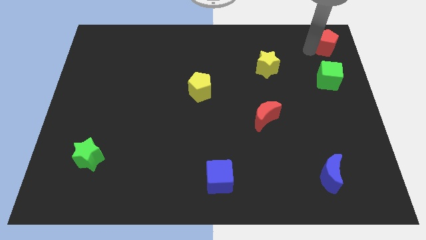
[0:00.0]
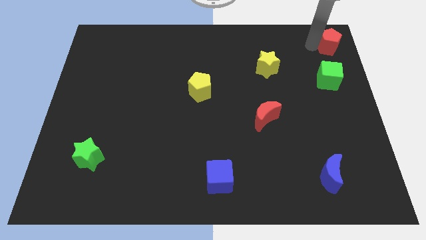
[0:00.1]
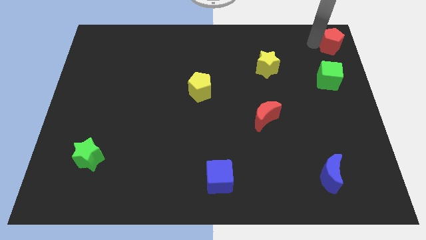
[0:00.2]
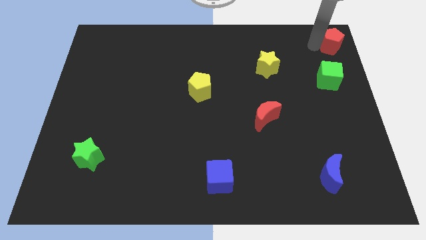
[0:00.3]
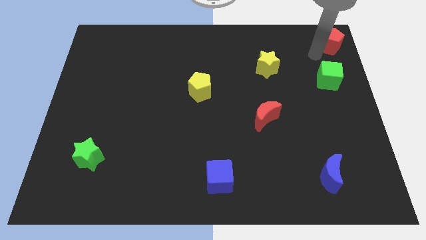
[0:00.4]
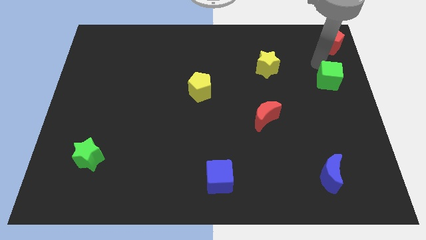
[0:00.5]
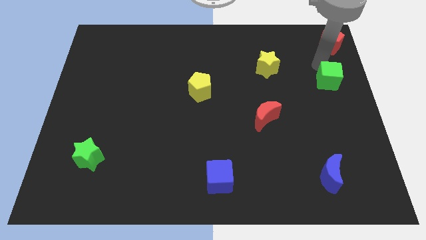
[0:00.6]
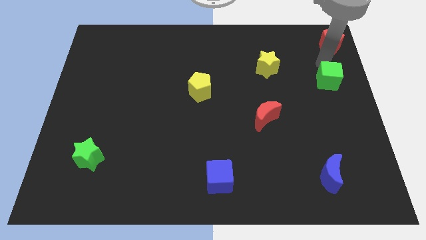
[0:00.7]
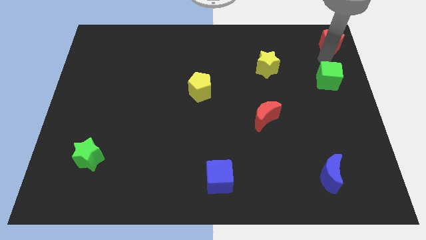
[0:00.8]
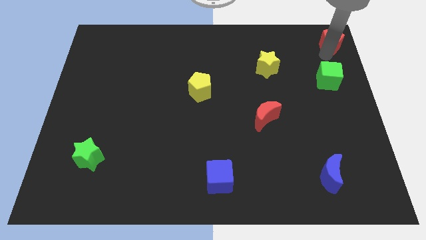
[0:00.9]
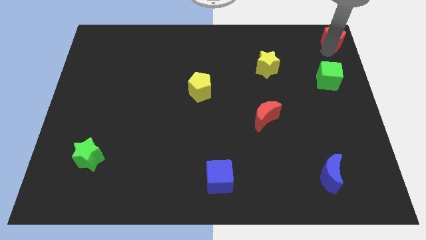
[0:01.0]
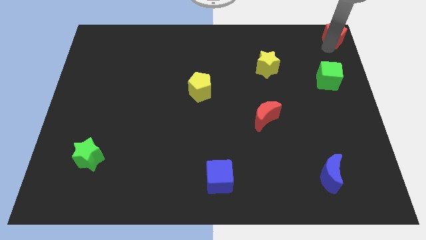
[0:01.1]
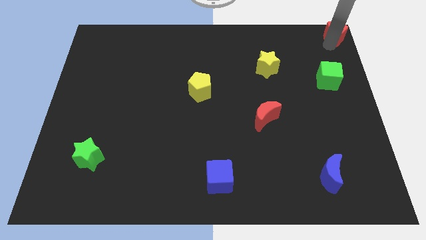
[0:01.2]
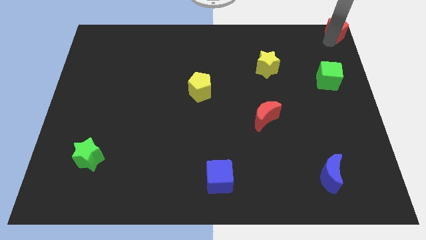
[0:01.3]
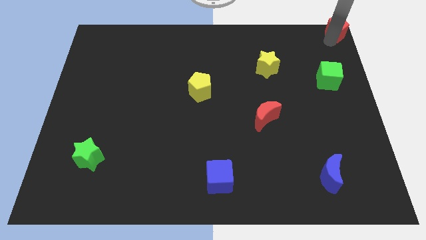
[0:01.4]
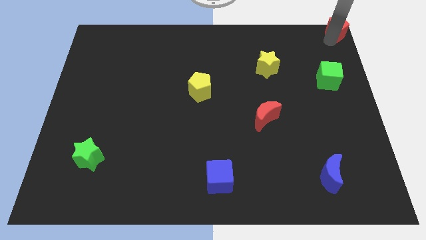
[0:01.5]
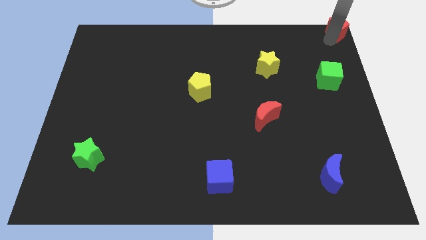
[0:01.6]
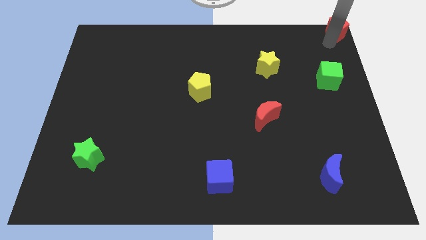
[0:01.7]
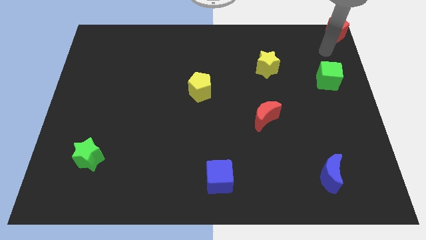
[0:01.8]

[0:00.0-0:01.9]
place the red pentagon at the top right corner of the board

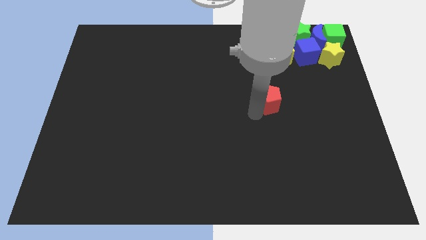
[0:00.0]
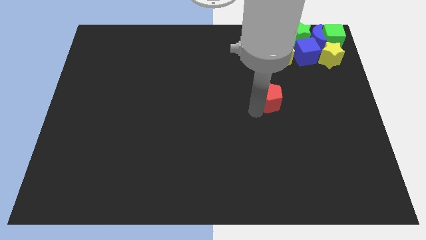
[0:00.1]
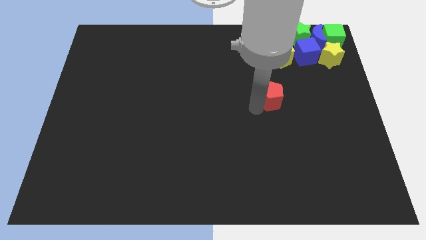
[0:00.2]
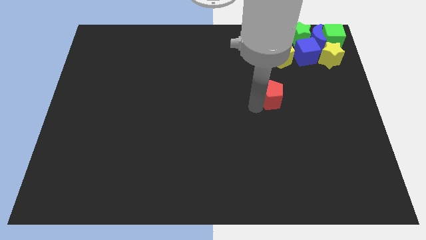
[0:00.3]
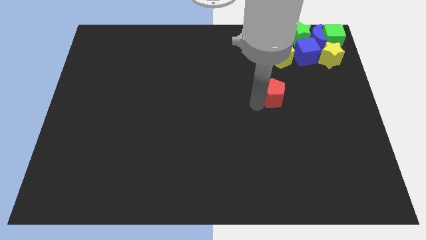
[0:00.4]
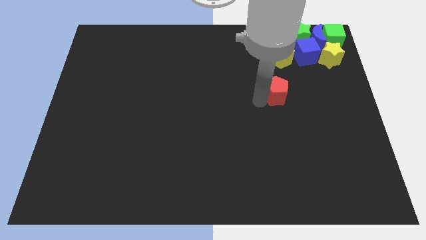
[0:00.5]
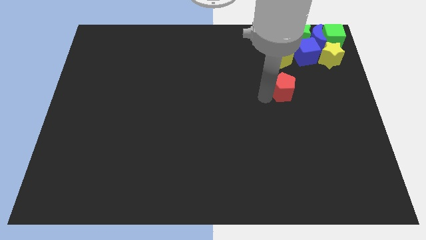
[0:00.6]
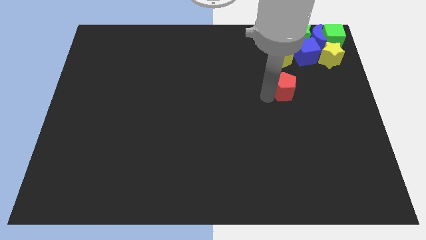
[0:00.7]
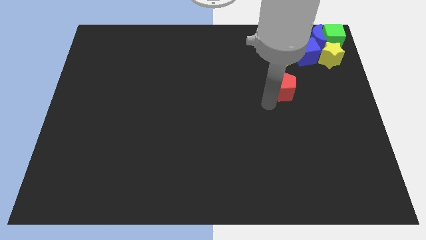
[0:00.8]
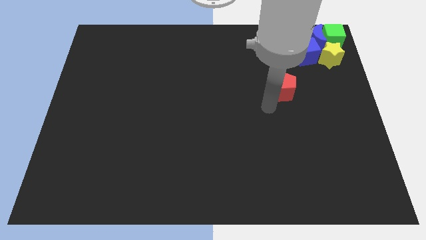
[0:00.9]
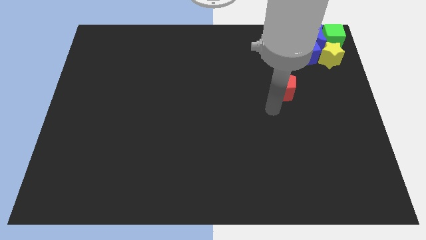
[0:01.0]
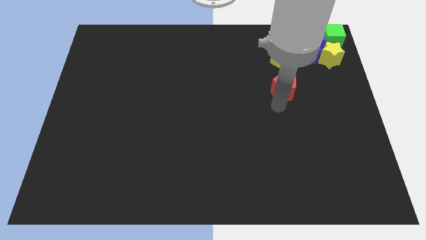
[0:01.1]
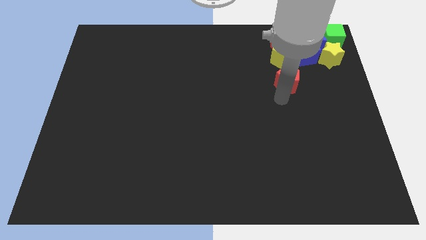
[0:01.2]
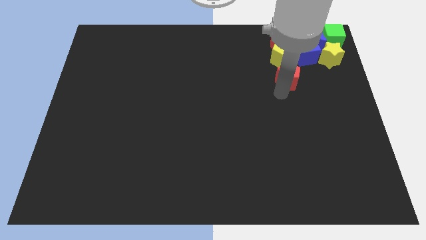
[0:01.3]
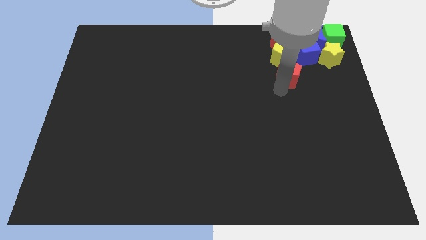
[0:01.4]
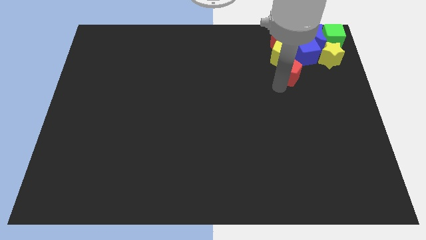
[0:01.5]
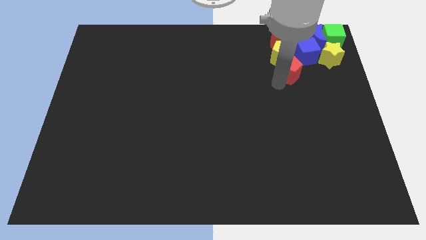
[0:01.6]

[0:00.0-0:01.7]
move the red pentagon close to the group of blocks

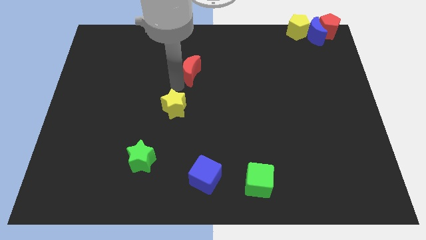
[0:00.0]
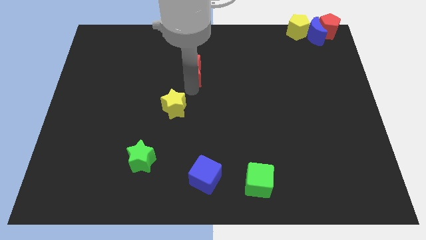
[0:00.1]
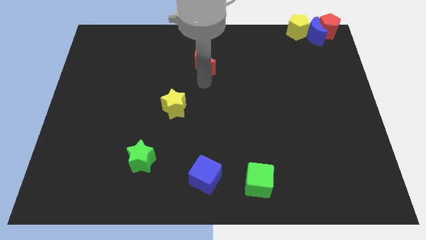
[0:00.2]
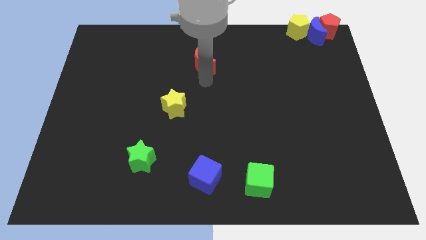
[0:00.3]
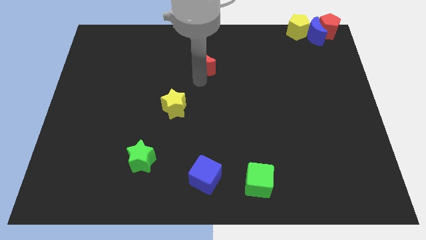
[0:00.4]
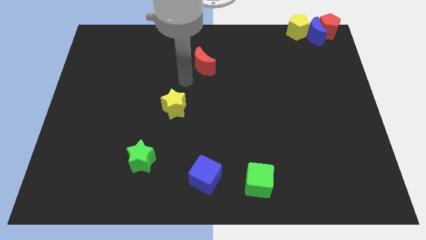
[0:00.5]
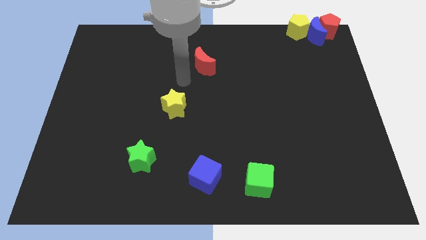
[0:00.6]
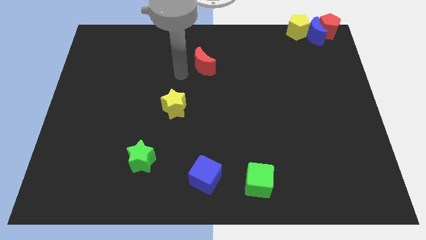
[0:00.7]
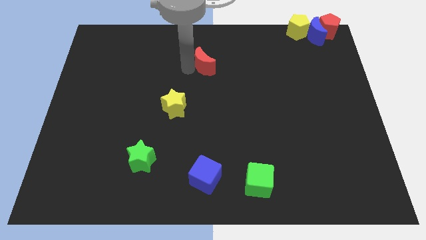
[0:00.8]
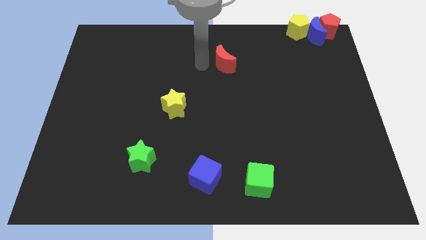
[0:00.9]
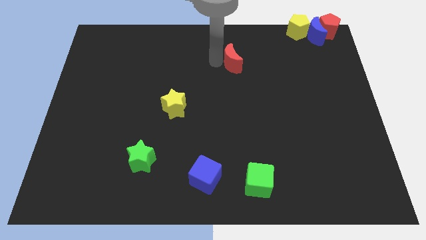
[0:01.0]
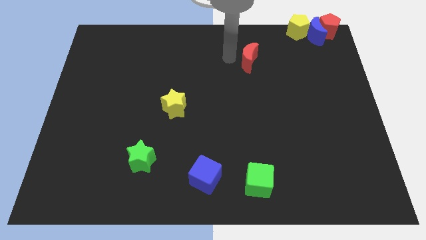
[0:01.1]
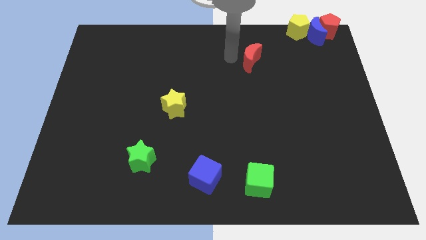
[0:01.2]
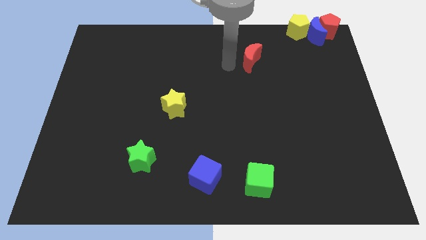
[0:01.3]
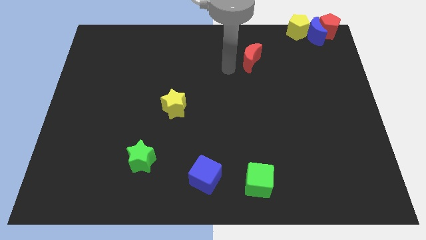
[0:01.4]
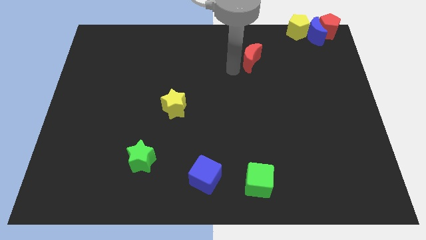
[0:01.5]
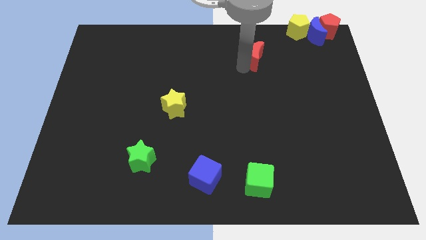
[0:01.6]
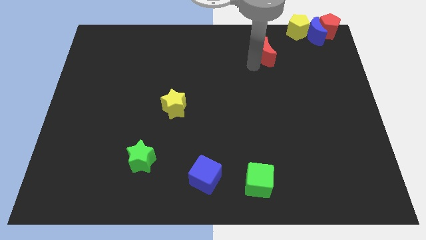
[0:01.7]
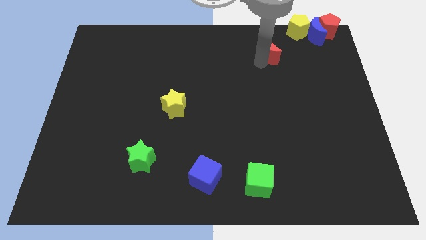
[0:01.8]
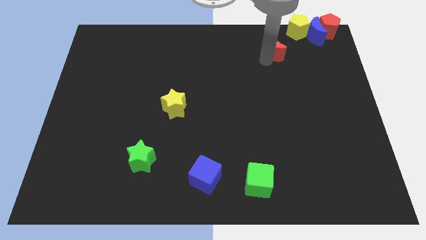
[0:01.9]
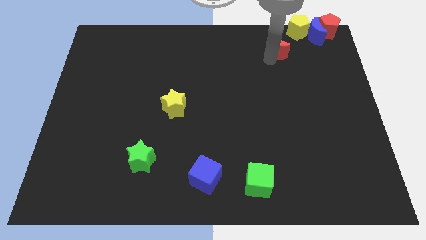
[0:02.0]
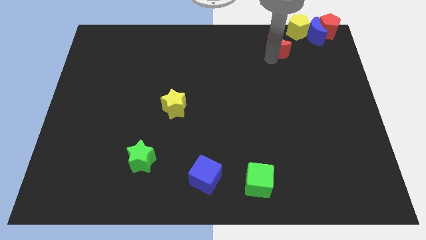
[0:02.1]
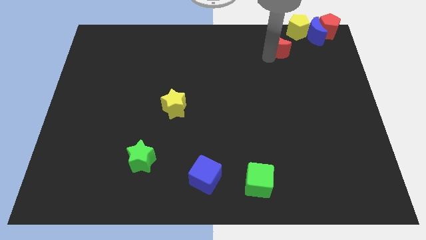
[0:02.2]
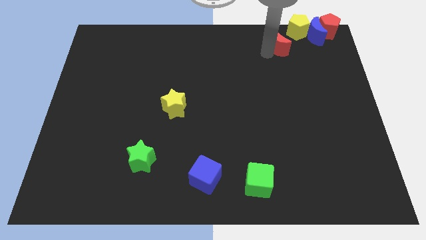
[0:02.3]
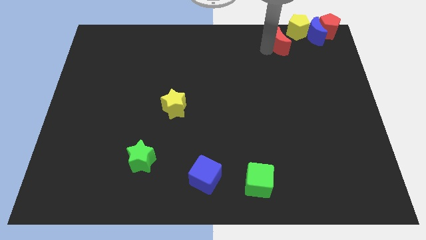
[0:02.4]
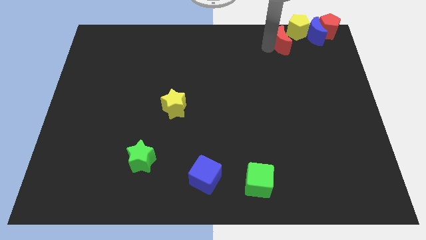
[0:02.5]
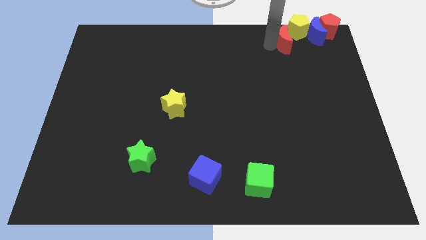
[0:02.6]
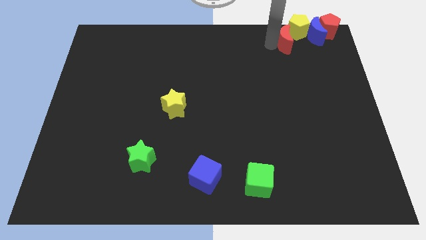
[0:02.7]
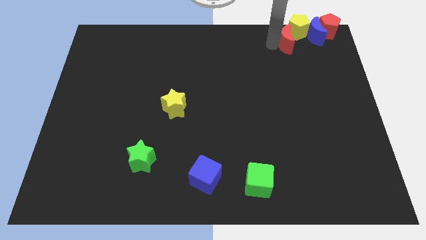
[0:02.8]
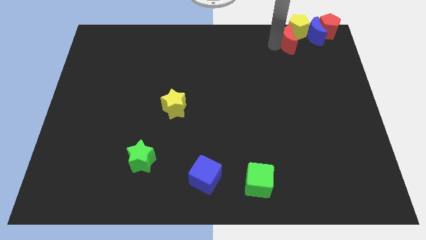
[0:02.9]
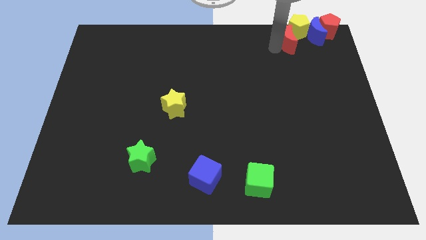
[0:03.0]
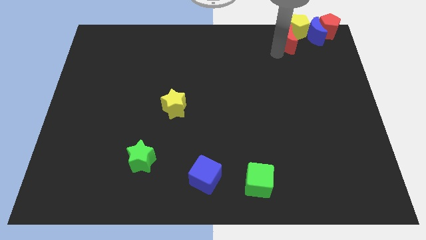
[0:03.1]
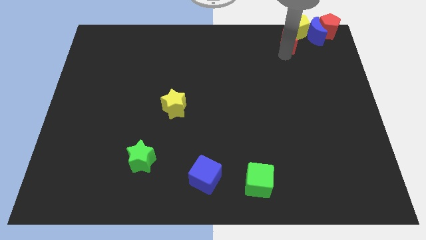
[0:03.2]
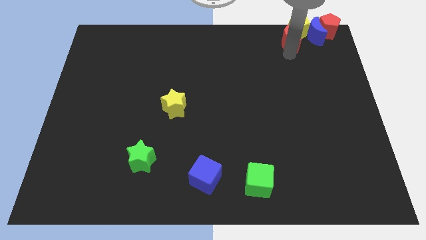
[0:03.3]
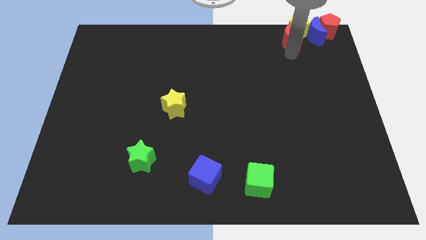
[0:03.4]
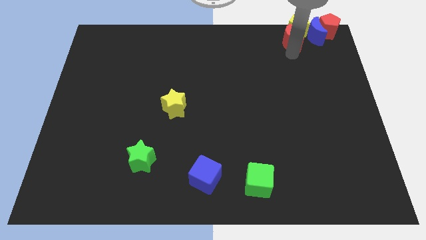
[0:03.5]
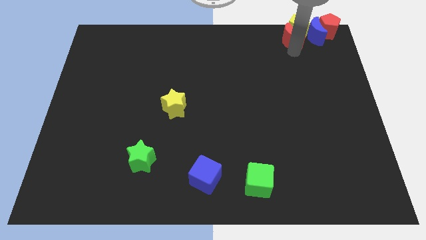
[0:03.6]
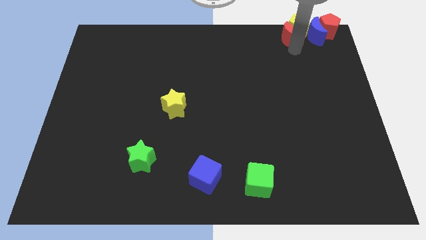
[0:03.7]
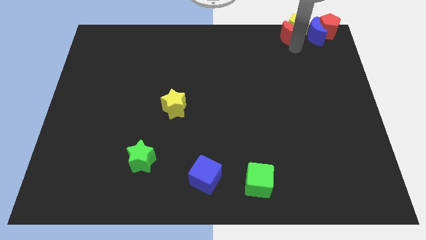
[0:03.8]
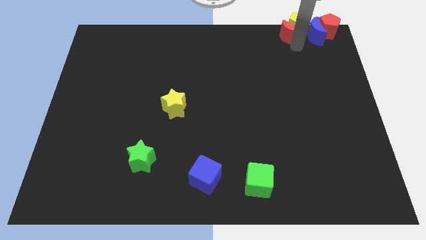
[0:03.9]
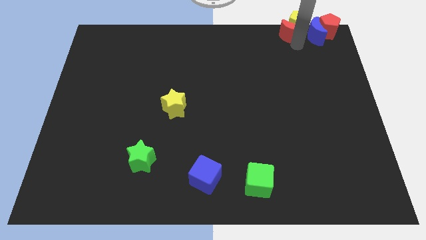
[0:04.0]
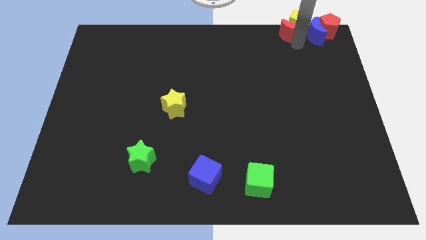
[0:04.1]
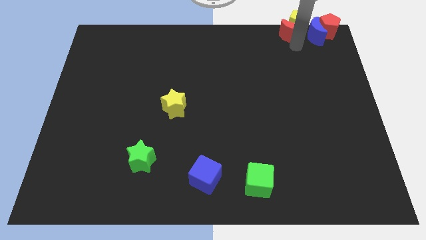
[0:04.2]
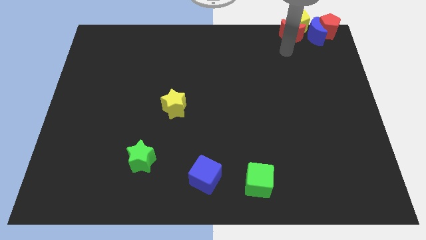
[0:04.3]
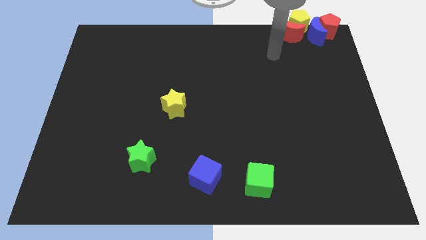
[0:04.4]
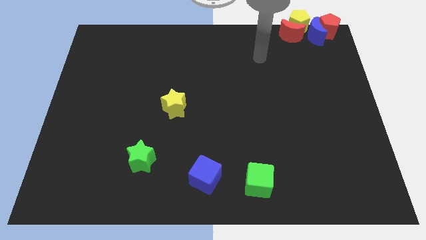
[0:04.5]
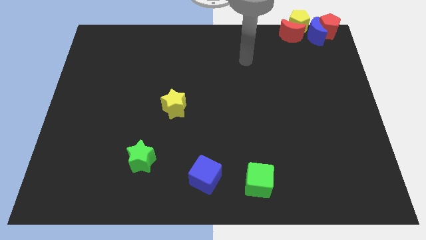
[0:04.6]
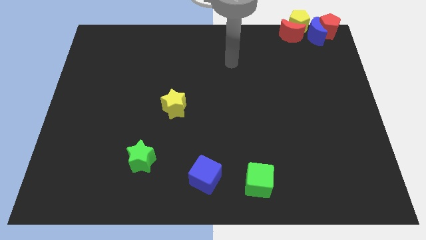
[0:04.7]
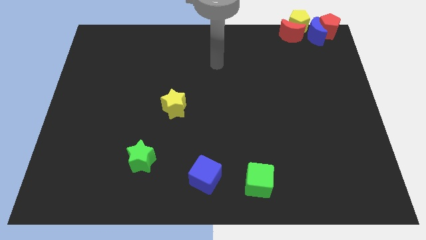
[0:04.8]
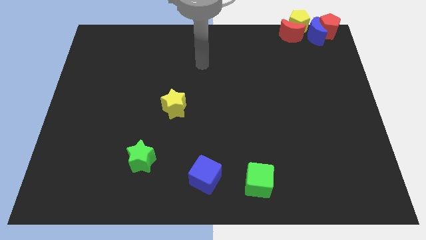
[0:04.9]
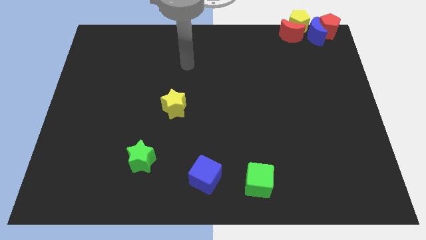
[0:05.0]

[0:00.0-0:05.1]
slide red moon into yellow pentagon

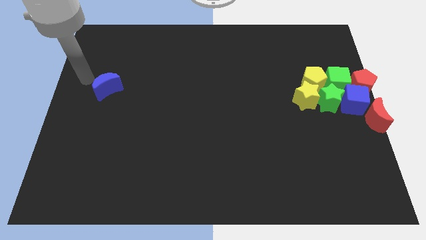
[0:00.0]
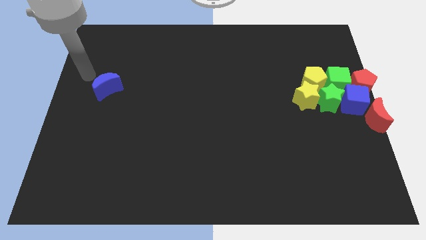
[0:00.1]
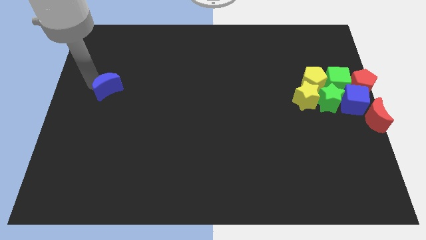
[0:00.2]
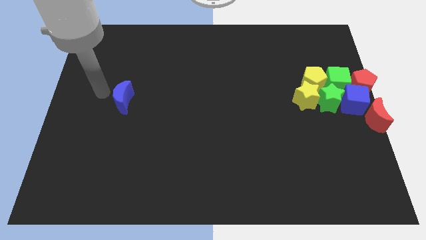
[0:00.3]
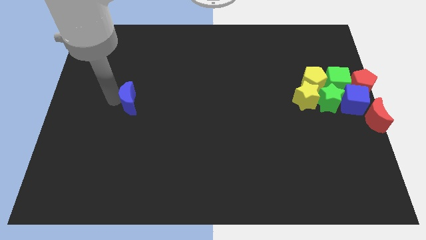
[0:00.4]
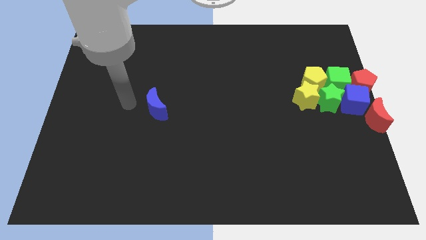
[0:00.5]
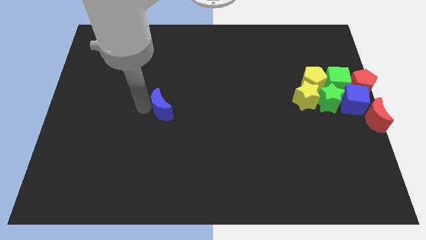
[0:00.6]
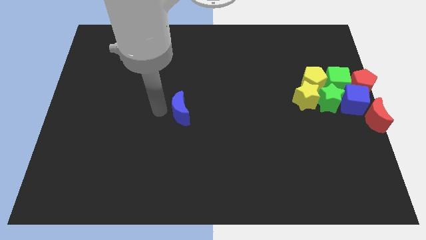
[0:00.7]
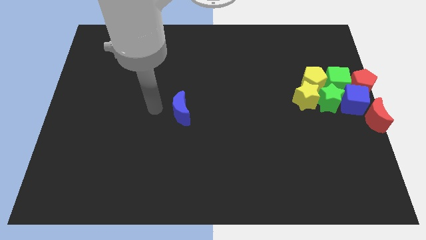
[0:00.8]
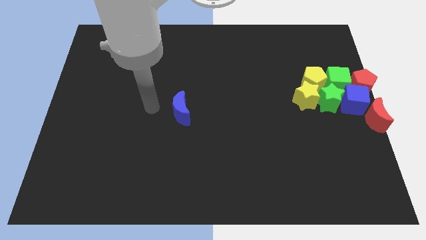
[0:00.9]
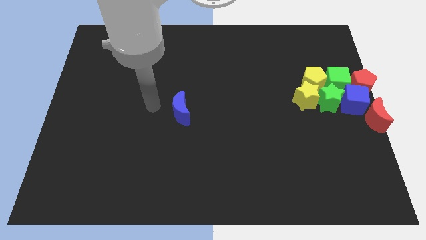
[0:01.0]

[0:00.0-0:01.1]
move the blue crescent to the center of the board
